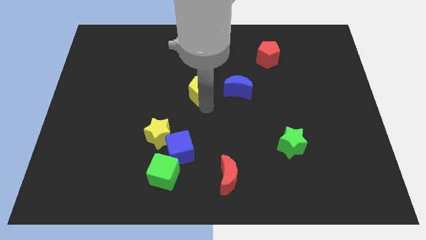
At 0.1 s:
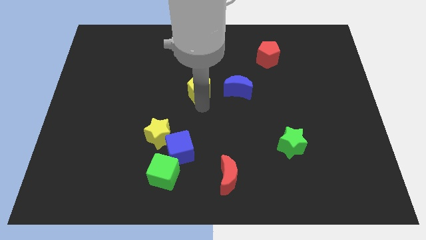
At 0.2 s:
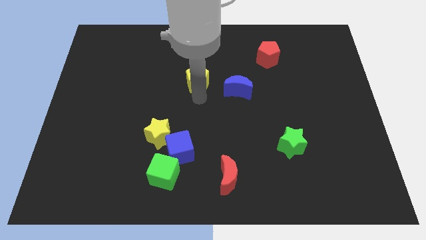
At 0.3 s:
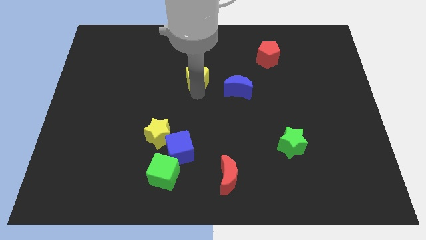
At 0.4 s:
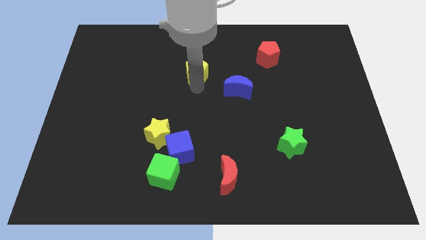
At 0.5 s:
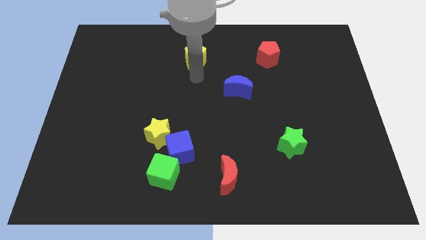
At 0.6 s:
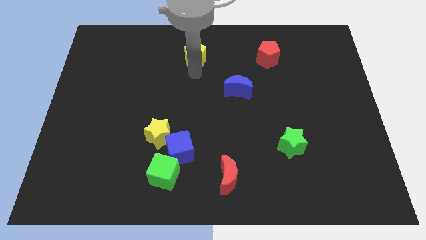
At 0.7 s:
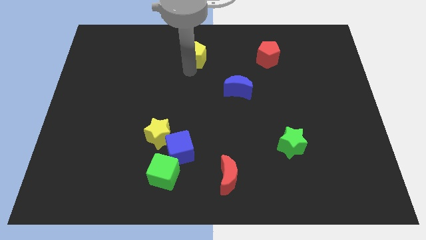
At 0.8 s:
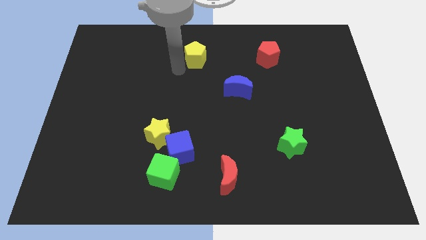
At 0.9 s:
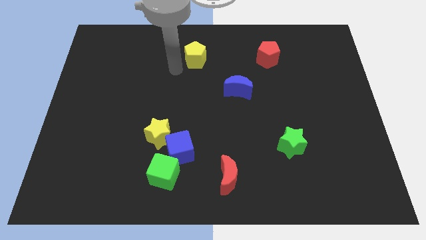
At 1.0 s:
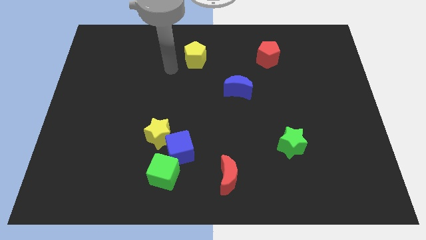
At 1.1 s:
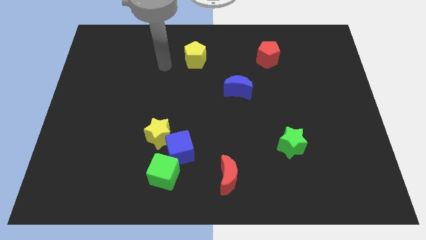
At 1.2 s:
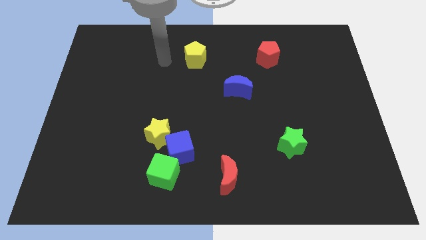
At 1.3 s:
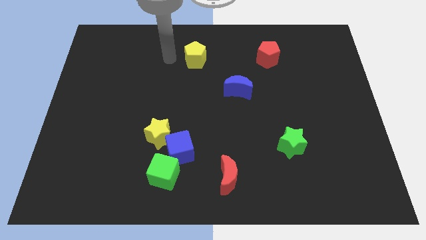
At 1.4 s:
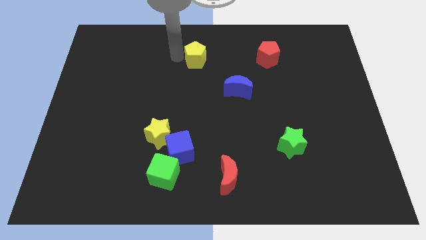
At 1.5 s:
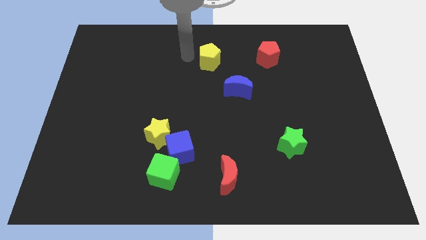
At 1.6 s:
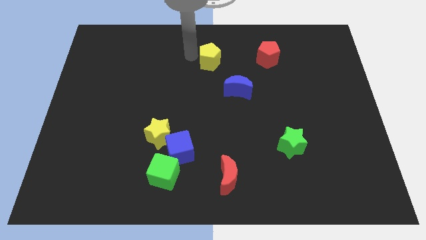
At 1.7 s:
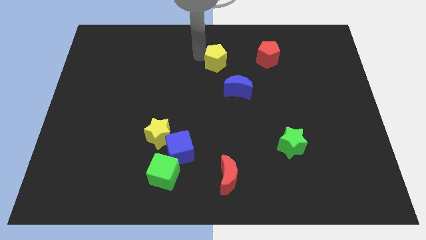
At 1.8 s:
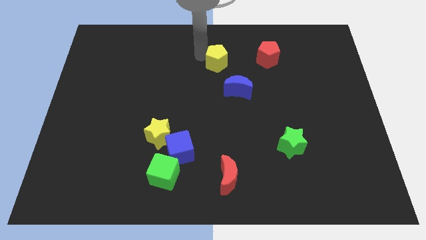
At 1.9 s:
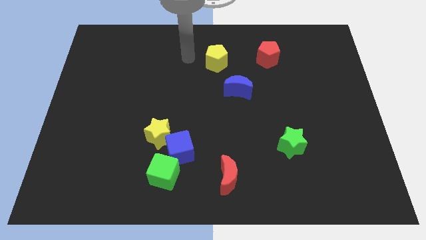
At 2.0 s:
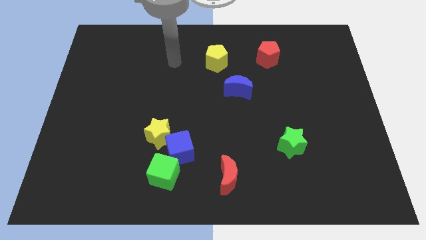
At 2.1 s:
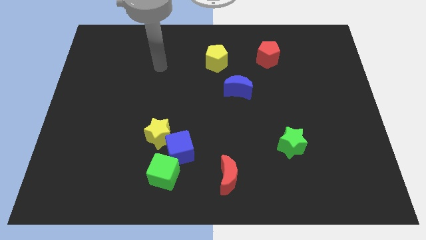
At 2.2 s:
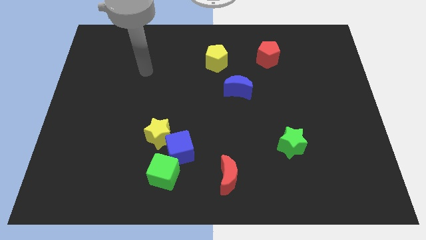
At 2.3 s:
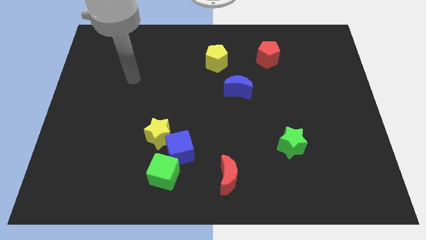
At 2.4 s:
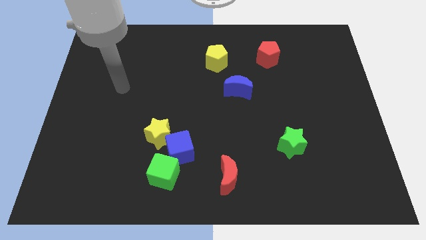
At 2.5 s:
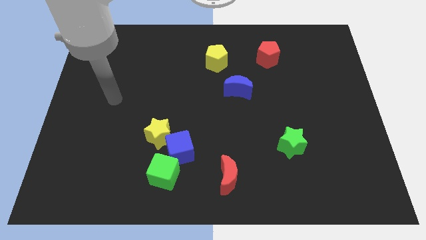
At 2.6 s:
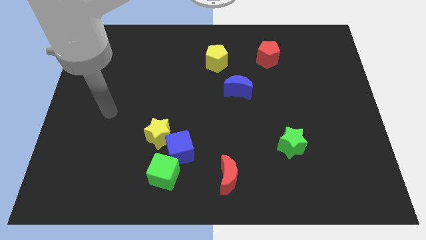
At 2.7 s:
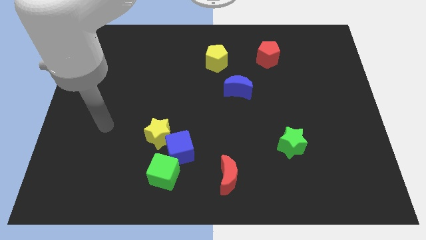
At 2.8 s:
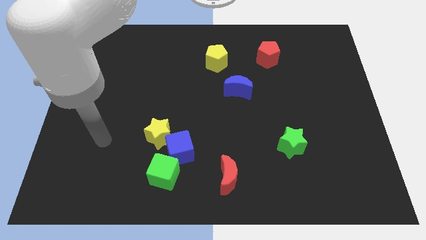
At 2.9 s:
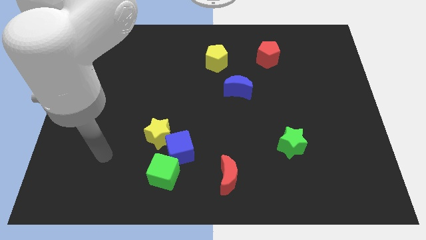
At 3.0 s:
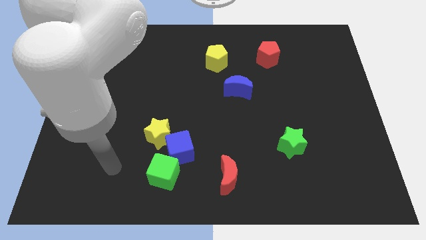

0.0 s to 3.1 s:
move the yellow pentagon to the top center

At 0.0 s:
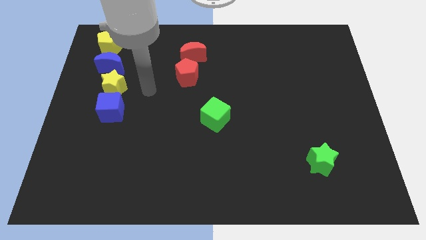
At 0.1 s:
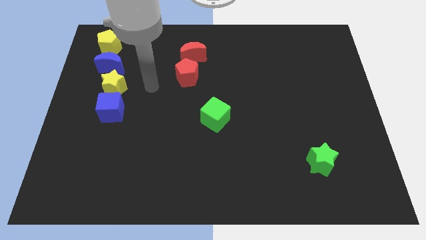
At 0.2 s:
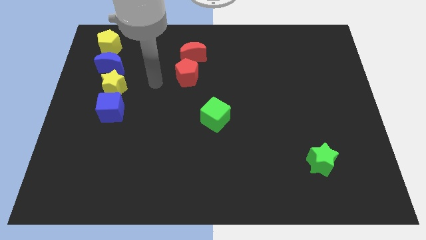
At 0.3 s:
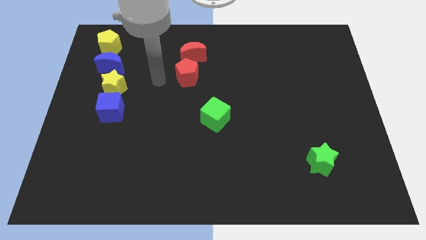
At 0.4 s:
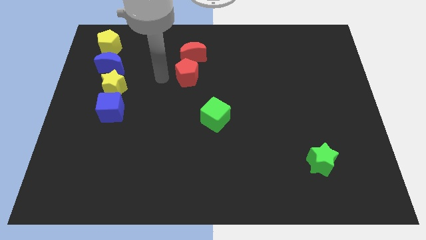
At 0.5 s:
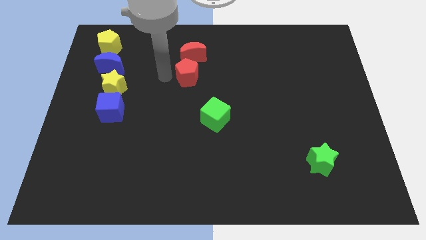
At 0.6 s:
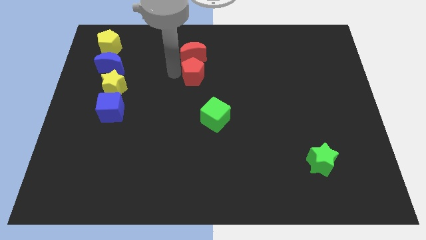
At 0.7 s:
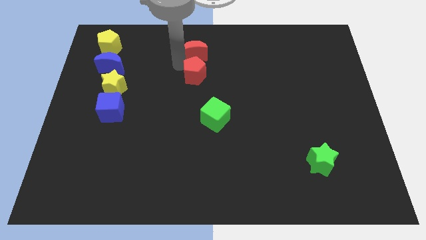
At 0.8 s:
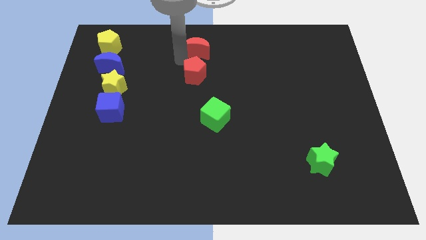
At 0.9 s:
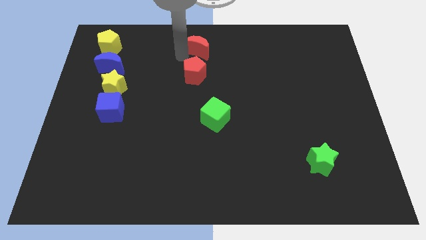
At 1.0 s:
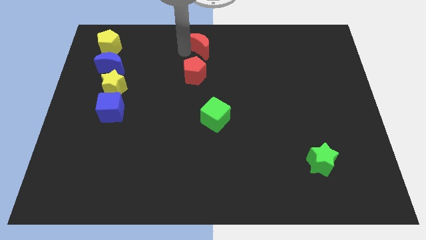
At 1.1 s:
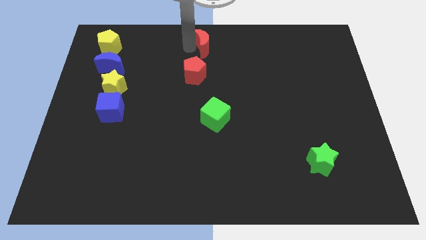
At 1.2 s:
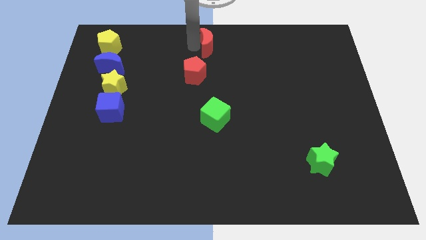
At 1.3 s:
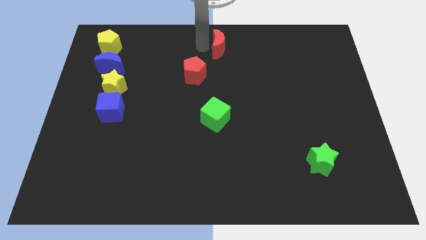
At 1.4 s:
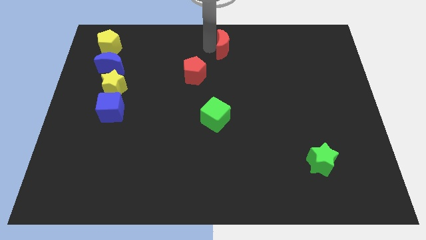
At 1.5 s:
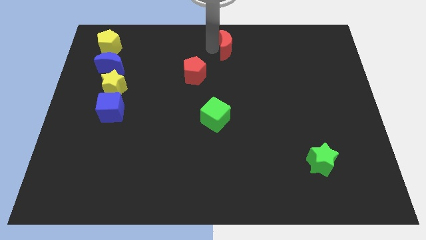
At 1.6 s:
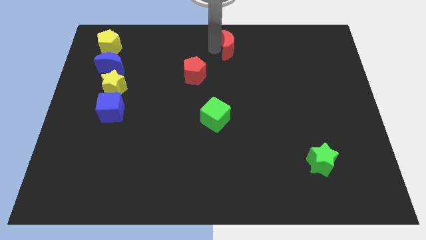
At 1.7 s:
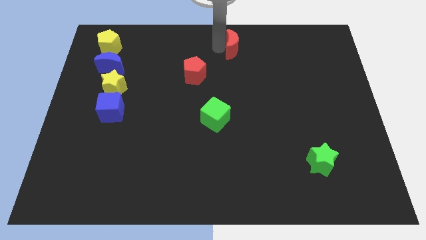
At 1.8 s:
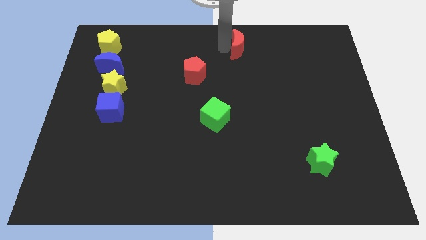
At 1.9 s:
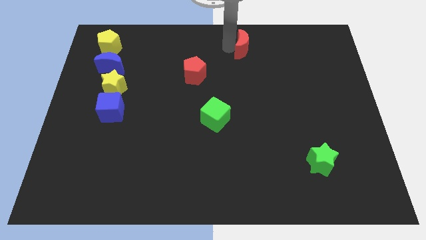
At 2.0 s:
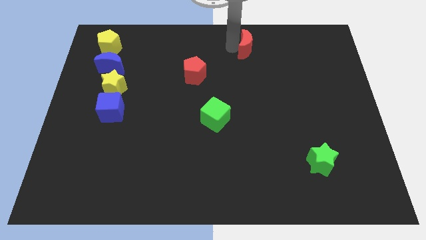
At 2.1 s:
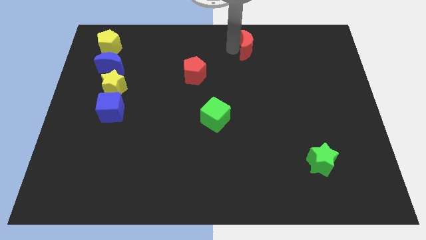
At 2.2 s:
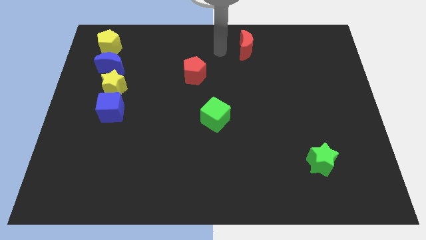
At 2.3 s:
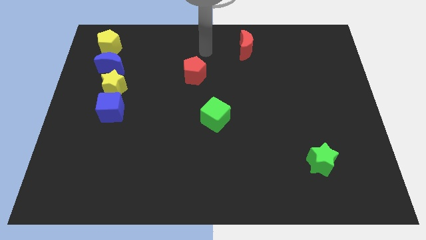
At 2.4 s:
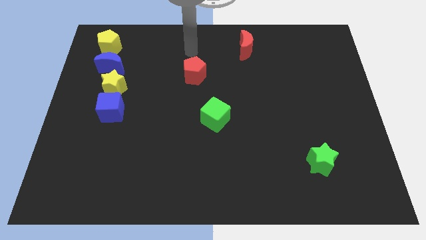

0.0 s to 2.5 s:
push the red crescent towards top right side

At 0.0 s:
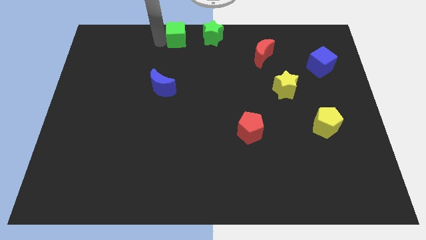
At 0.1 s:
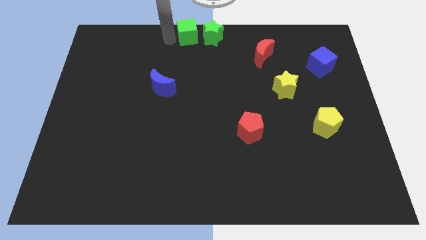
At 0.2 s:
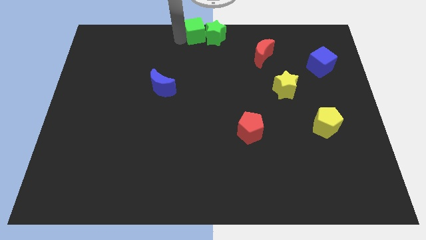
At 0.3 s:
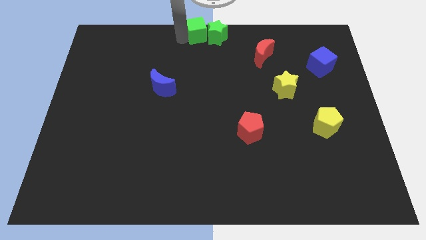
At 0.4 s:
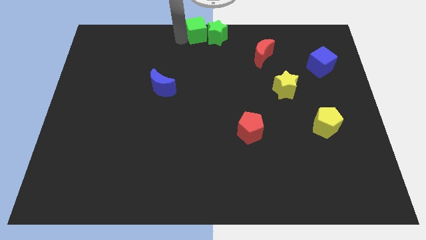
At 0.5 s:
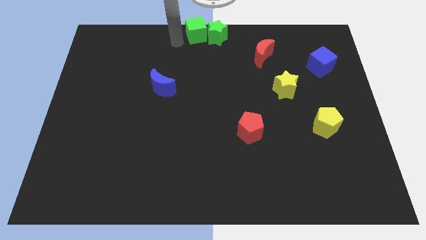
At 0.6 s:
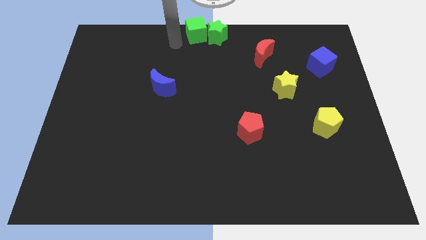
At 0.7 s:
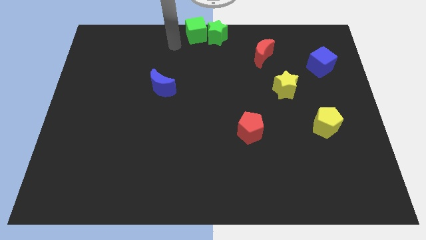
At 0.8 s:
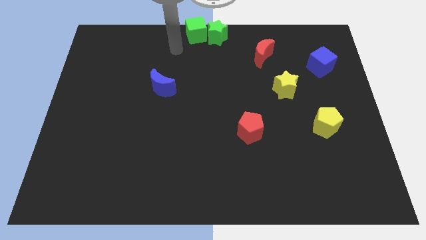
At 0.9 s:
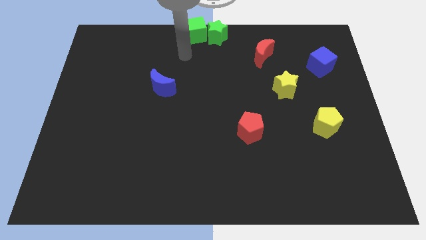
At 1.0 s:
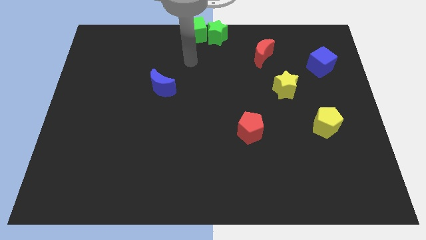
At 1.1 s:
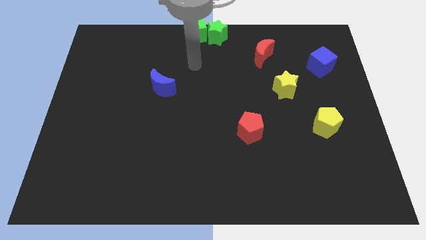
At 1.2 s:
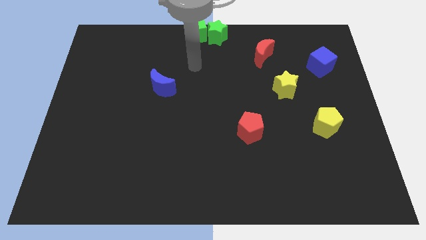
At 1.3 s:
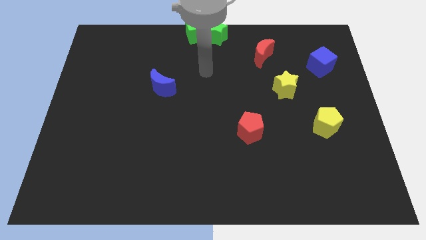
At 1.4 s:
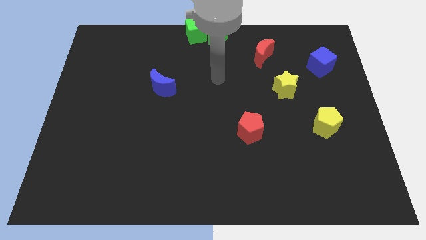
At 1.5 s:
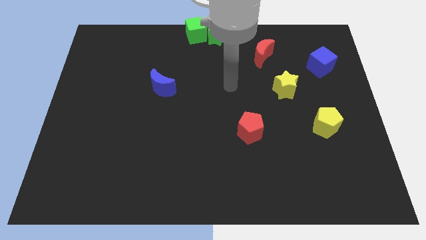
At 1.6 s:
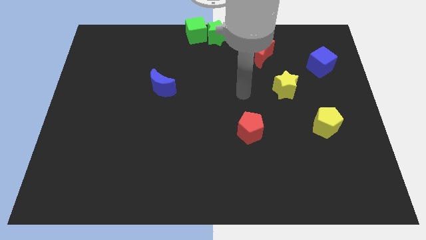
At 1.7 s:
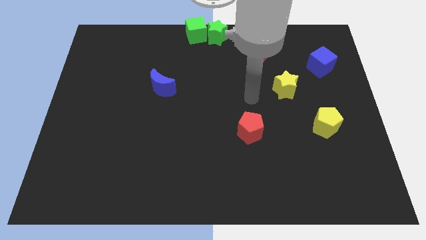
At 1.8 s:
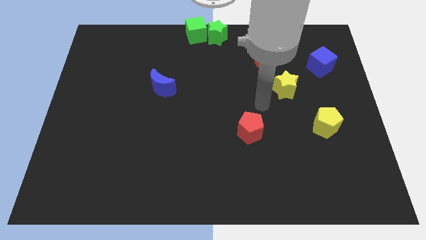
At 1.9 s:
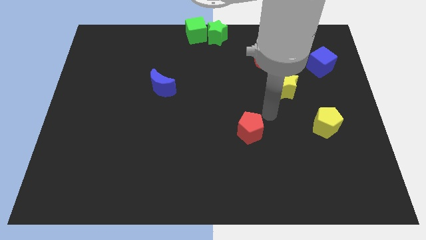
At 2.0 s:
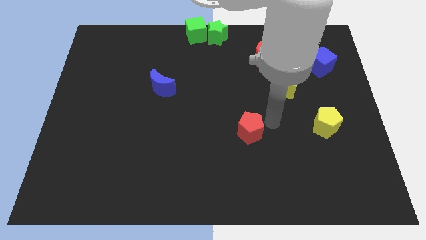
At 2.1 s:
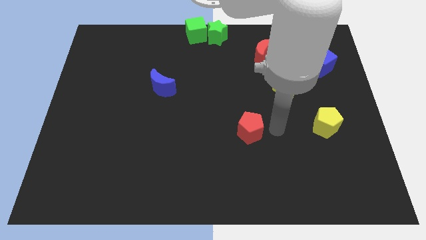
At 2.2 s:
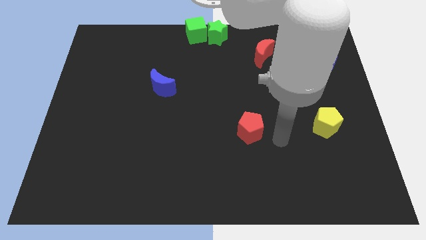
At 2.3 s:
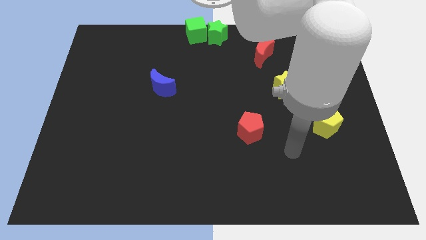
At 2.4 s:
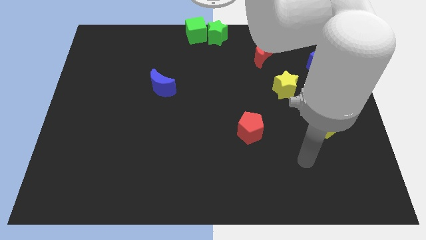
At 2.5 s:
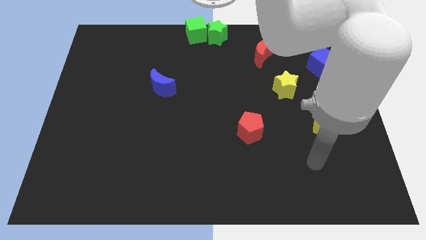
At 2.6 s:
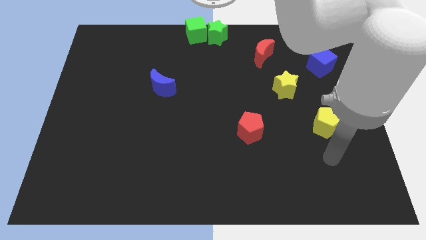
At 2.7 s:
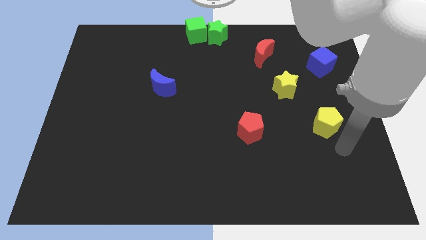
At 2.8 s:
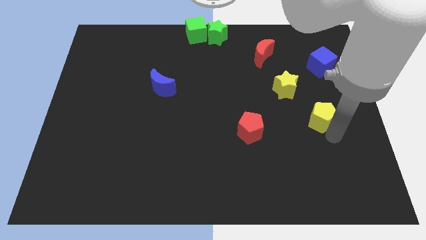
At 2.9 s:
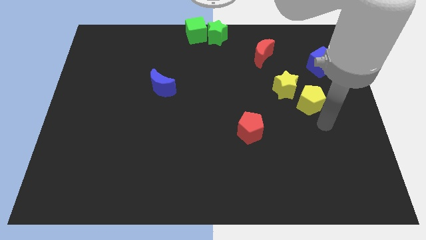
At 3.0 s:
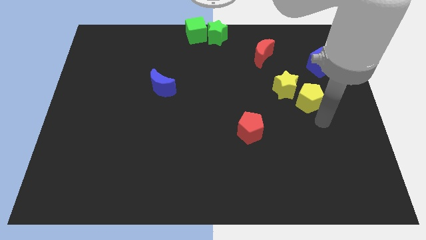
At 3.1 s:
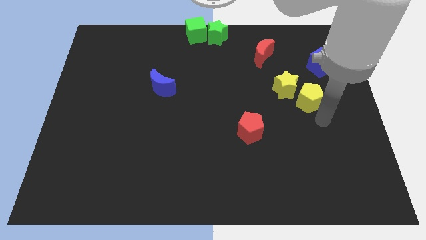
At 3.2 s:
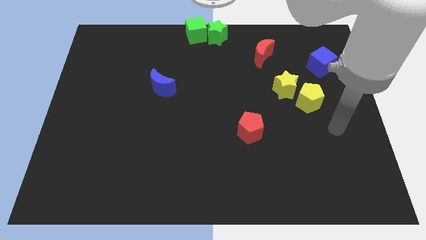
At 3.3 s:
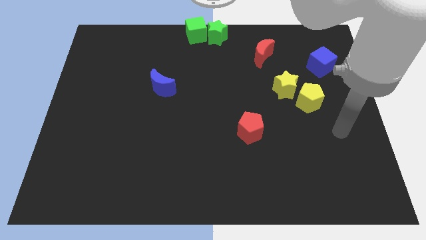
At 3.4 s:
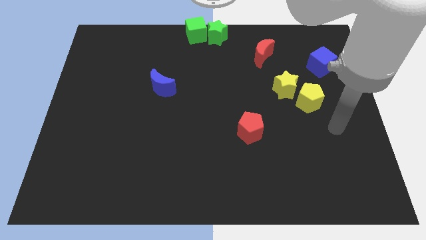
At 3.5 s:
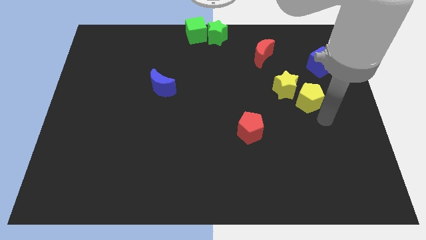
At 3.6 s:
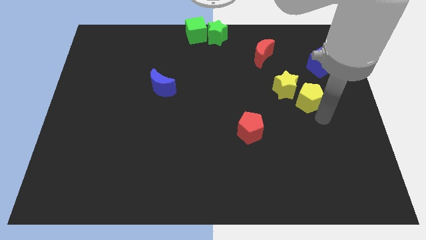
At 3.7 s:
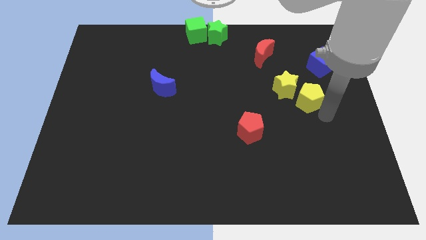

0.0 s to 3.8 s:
move the green cube into the green star
